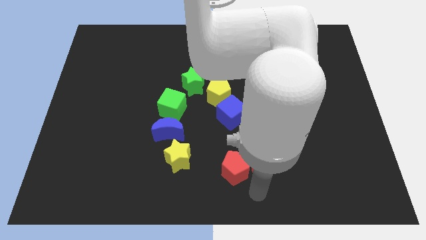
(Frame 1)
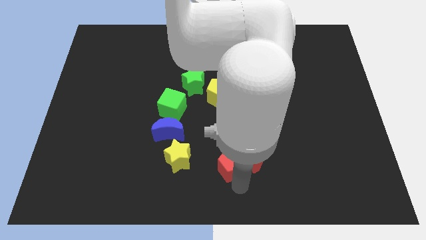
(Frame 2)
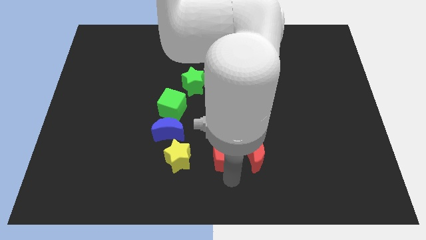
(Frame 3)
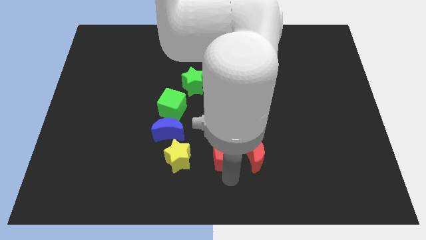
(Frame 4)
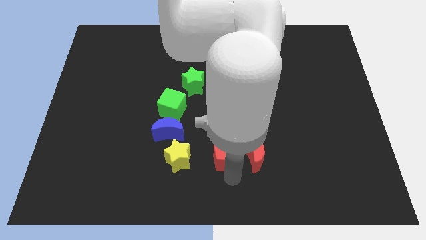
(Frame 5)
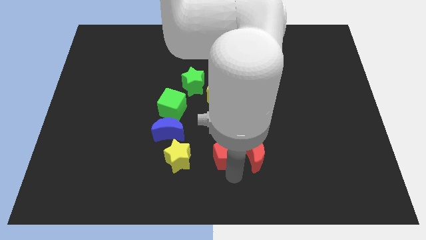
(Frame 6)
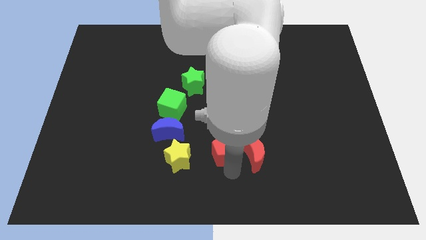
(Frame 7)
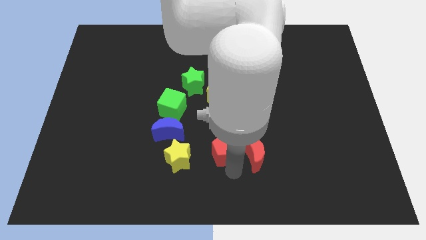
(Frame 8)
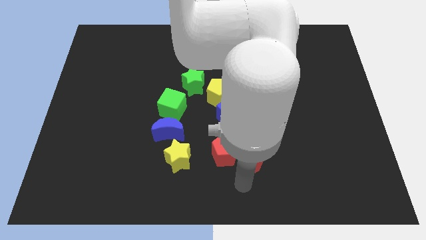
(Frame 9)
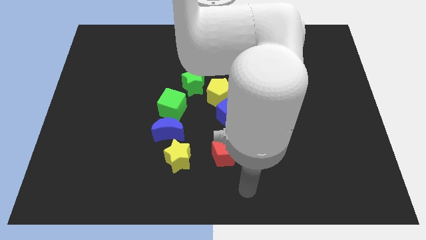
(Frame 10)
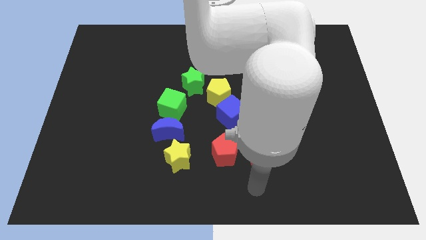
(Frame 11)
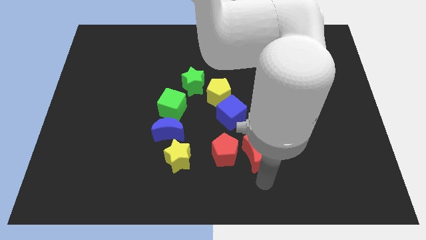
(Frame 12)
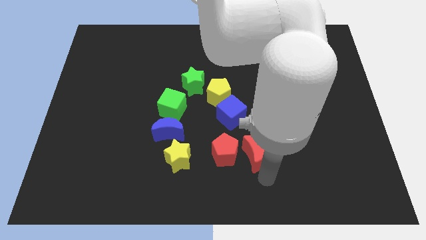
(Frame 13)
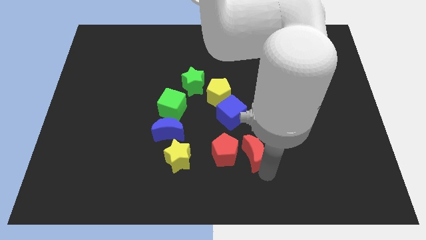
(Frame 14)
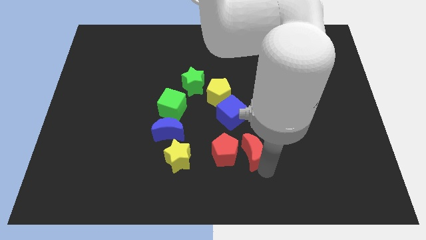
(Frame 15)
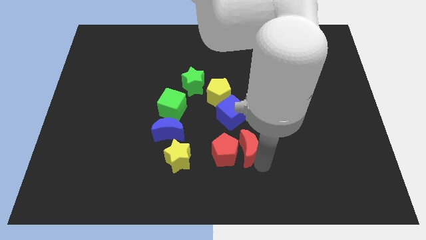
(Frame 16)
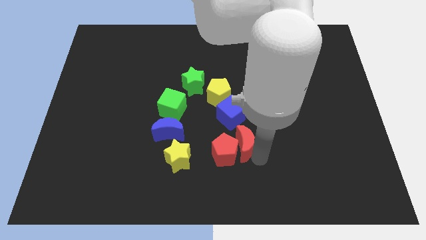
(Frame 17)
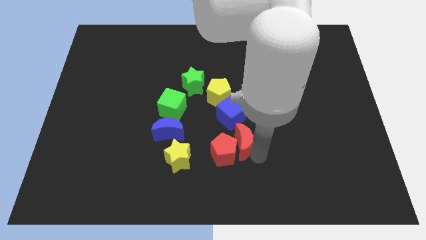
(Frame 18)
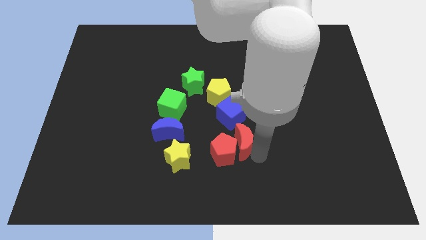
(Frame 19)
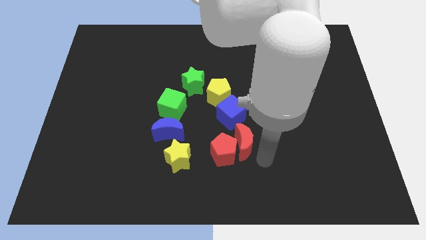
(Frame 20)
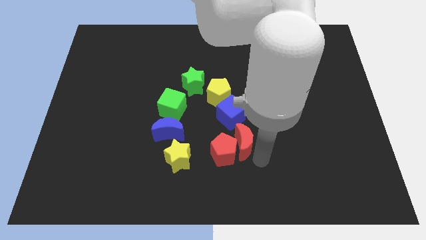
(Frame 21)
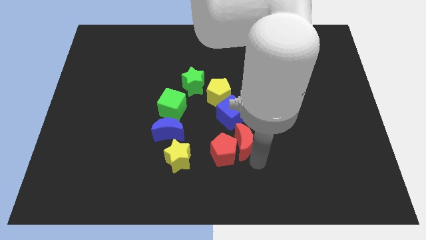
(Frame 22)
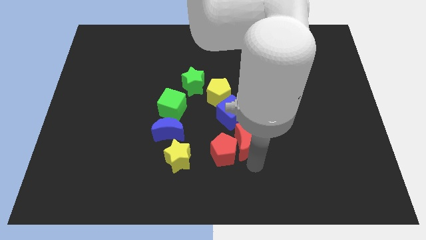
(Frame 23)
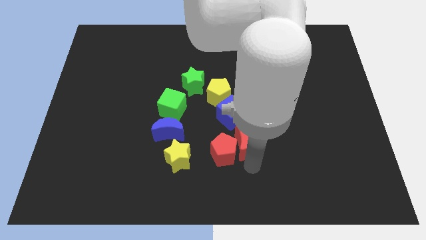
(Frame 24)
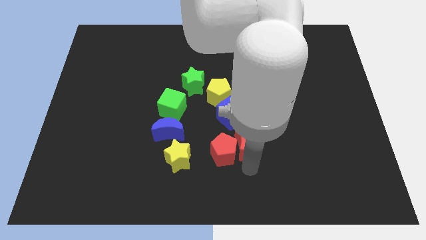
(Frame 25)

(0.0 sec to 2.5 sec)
move the red blocks slightly up

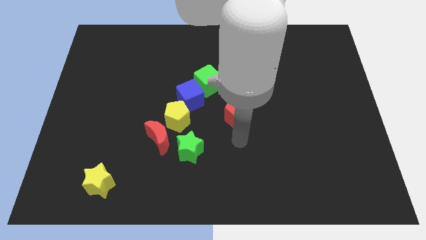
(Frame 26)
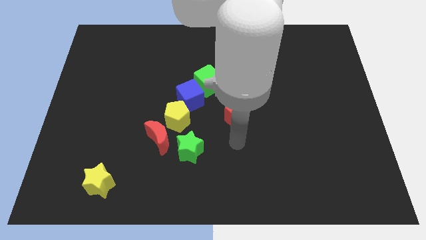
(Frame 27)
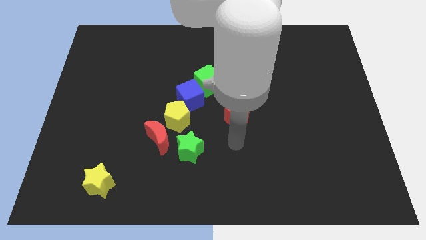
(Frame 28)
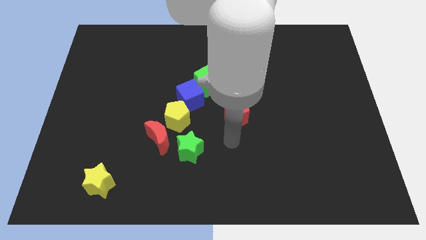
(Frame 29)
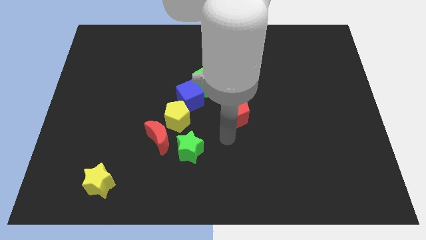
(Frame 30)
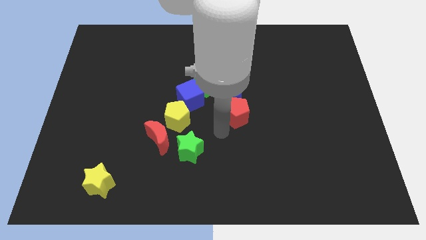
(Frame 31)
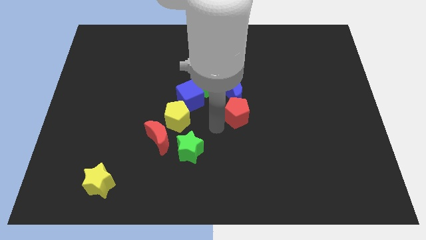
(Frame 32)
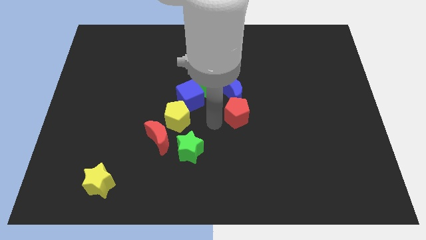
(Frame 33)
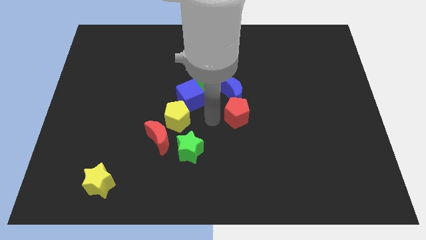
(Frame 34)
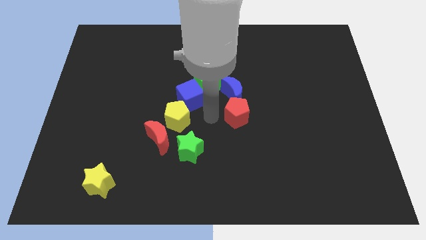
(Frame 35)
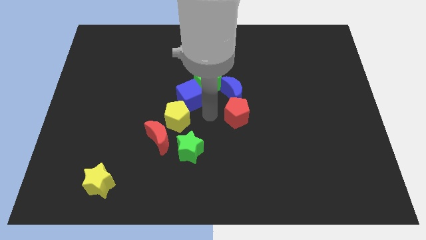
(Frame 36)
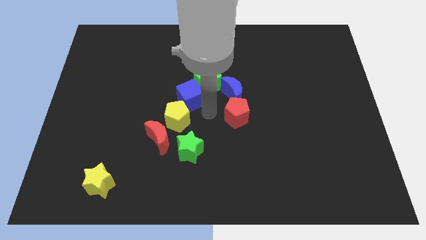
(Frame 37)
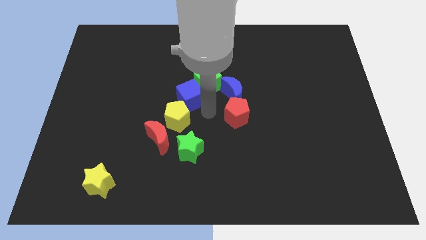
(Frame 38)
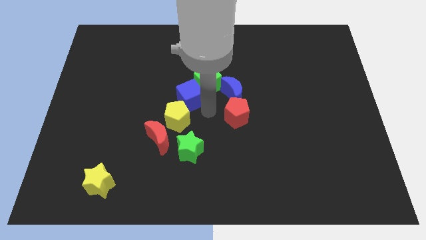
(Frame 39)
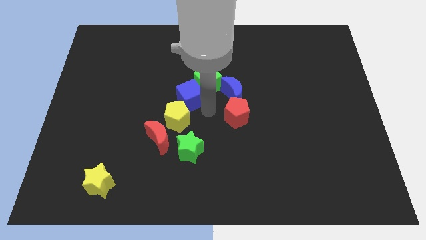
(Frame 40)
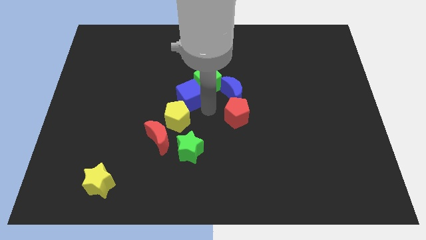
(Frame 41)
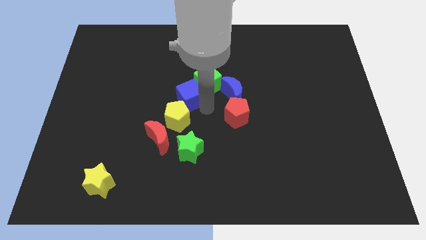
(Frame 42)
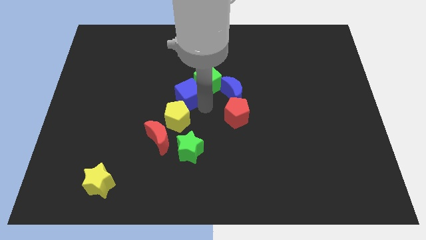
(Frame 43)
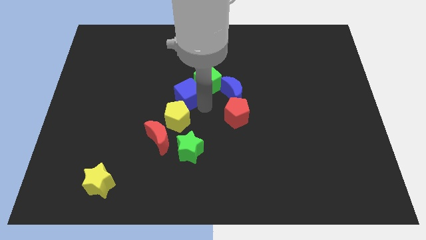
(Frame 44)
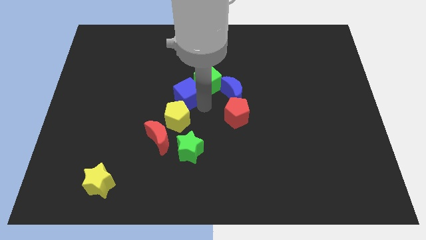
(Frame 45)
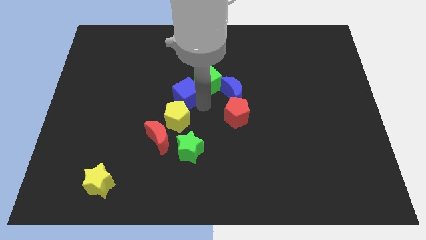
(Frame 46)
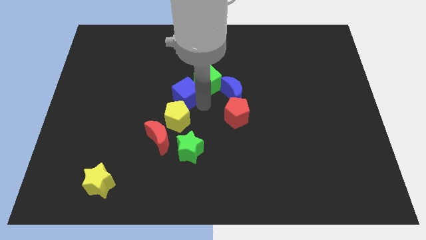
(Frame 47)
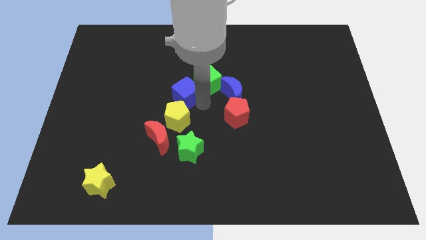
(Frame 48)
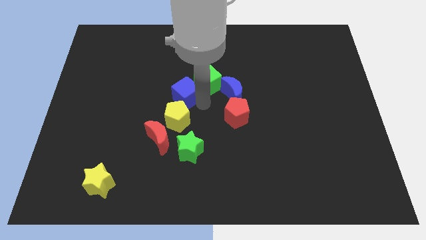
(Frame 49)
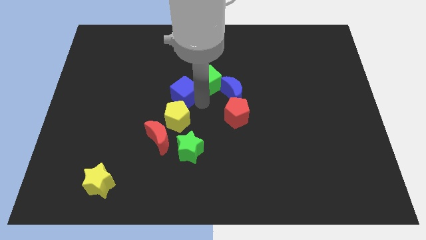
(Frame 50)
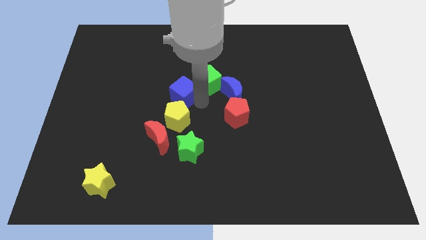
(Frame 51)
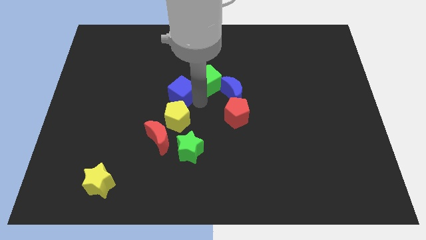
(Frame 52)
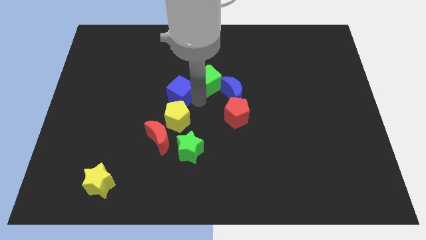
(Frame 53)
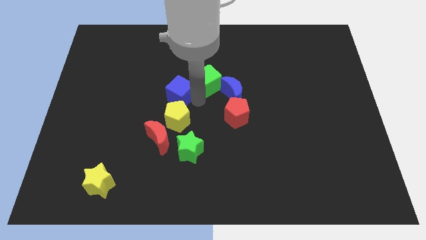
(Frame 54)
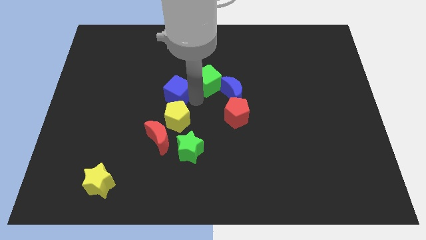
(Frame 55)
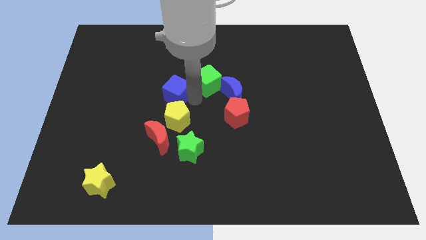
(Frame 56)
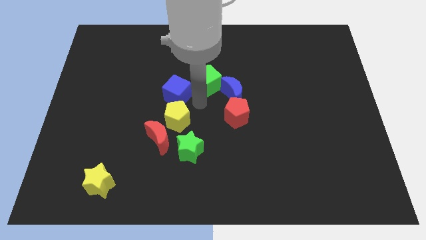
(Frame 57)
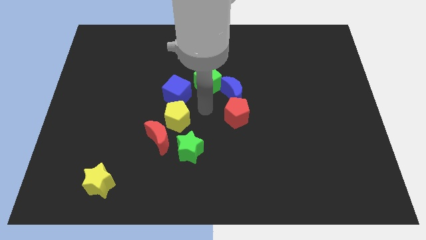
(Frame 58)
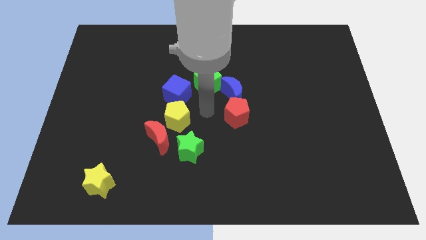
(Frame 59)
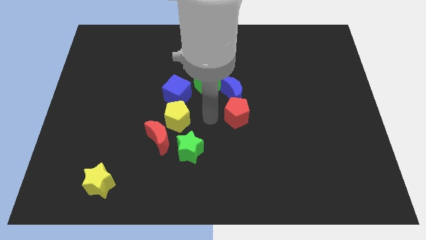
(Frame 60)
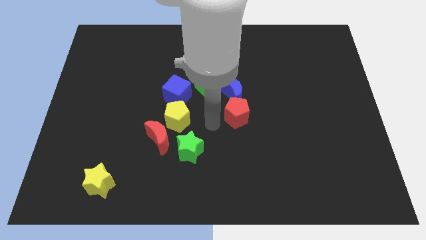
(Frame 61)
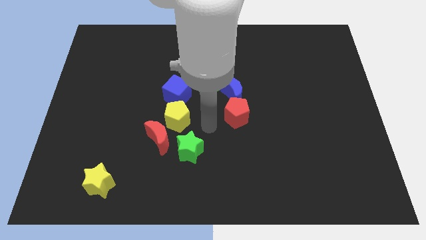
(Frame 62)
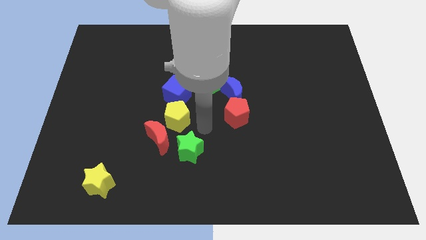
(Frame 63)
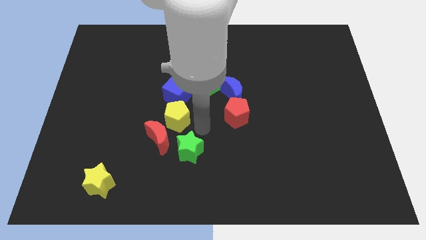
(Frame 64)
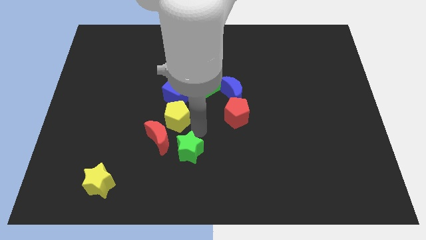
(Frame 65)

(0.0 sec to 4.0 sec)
slide the blue cube slightly to the top left side of the board

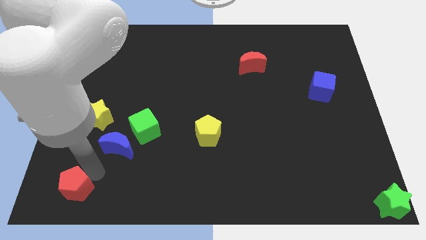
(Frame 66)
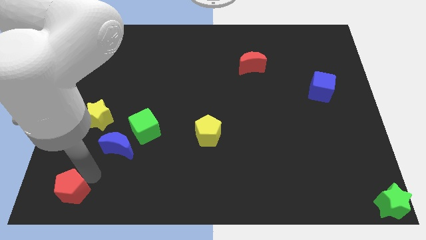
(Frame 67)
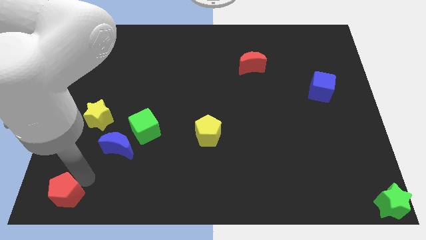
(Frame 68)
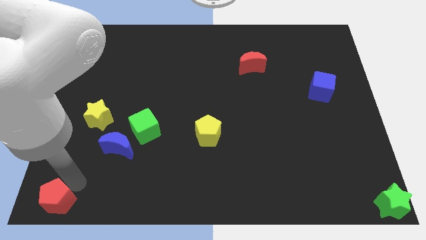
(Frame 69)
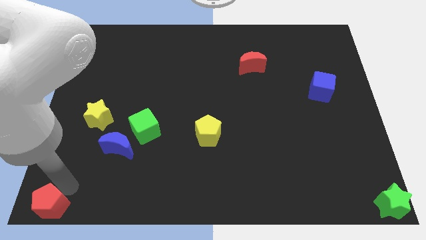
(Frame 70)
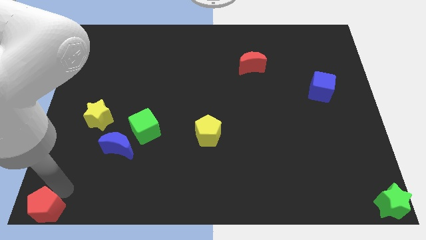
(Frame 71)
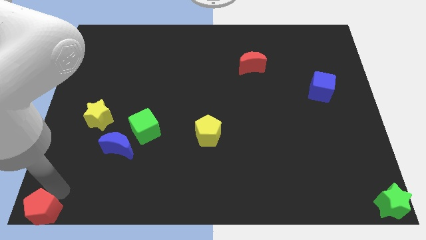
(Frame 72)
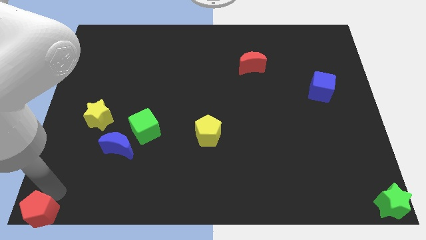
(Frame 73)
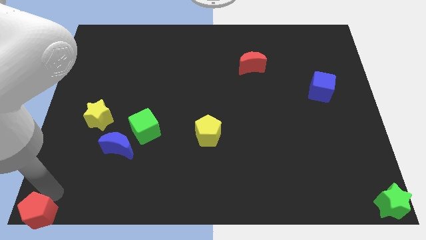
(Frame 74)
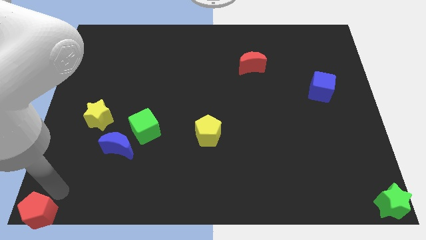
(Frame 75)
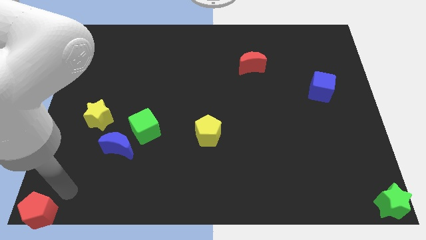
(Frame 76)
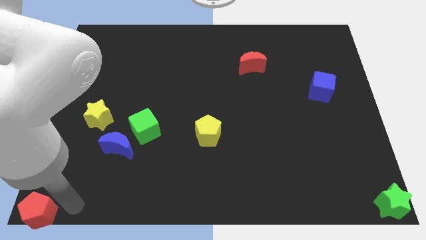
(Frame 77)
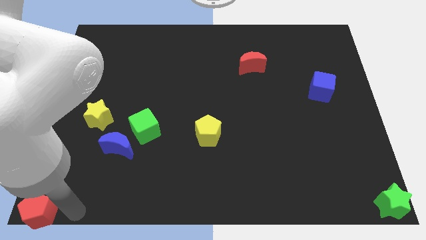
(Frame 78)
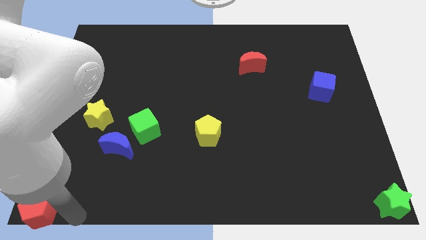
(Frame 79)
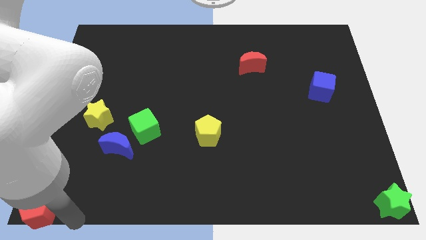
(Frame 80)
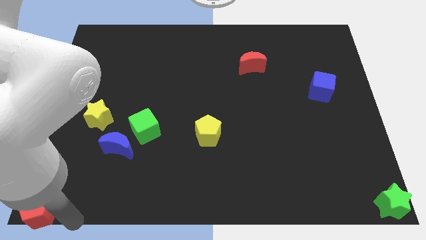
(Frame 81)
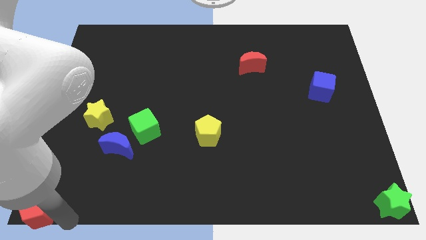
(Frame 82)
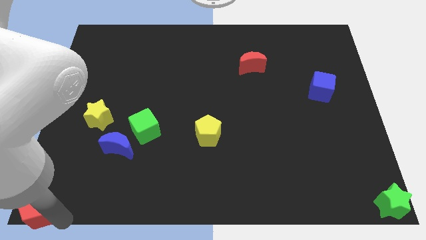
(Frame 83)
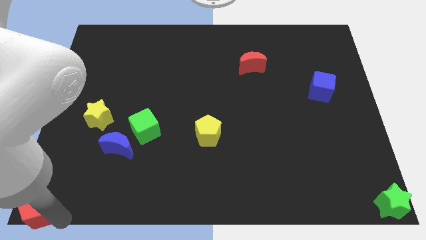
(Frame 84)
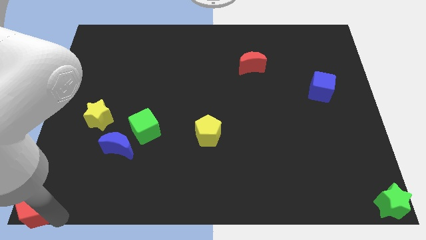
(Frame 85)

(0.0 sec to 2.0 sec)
move red pentagon to the bottom left corner of the board

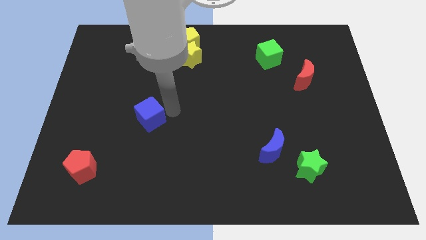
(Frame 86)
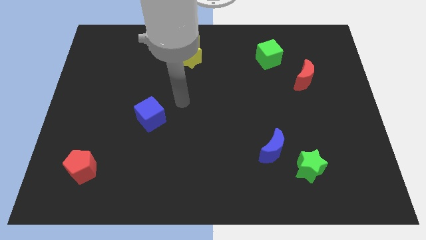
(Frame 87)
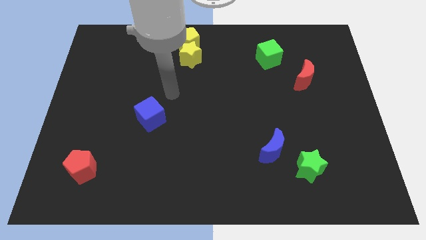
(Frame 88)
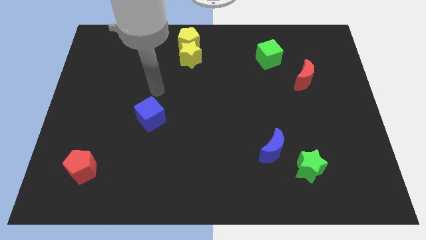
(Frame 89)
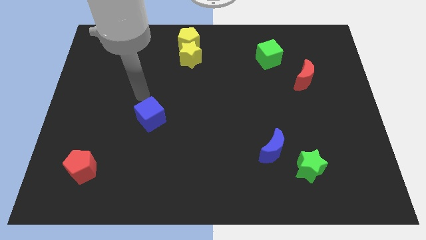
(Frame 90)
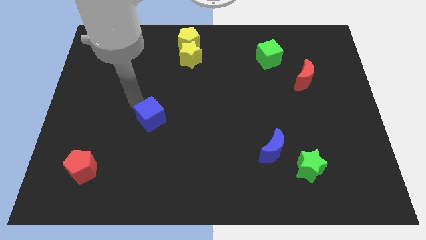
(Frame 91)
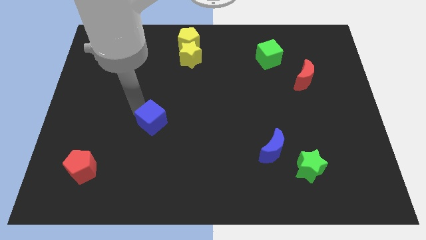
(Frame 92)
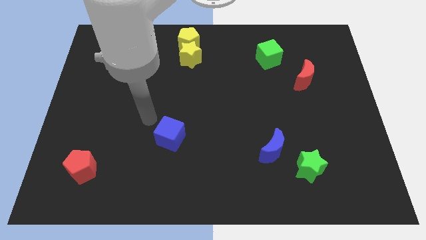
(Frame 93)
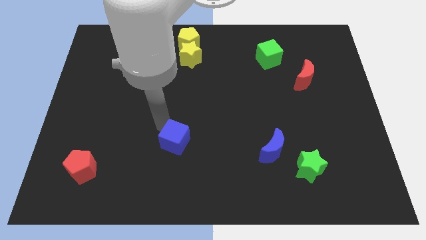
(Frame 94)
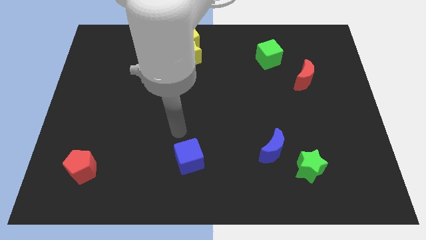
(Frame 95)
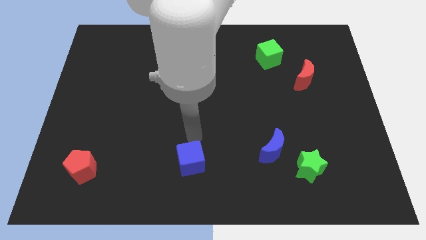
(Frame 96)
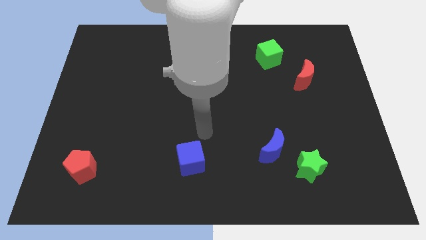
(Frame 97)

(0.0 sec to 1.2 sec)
place blue cube in between red pentagon and blue moon
